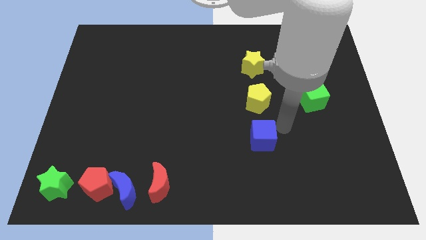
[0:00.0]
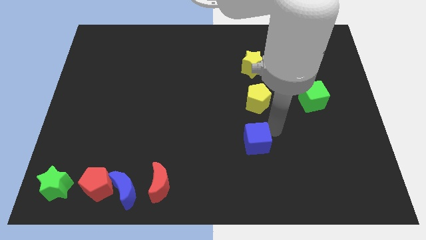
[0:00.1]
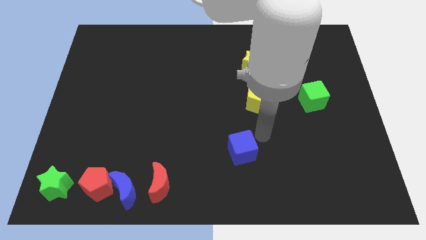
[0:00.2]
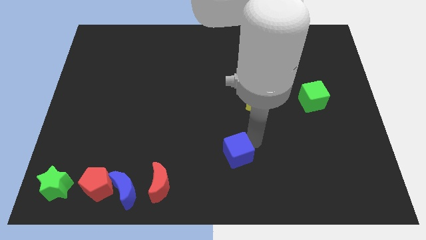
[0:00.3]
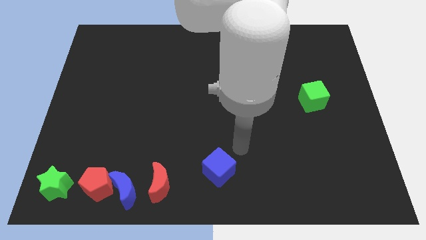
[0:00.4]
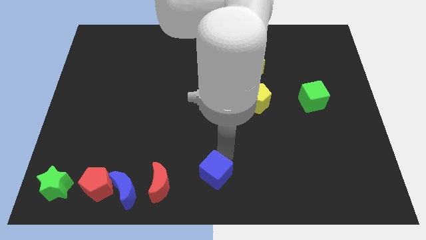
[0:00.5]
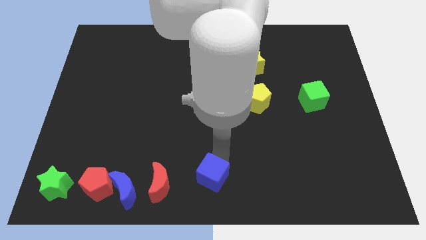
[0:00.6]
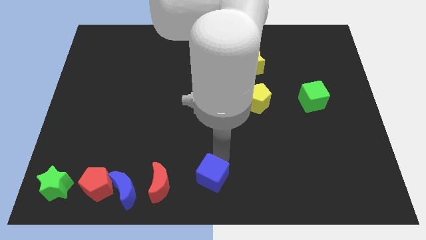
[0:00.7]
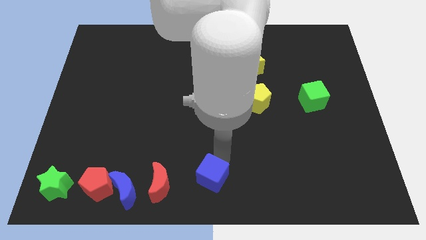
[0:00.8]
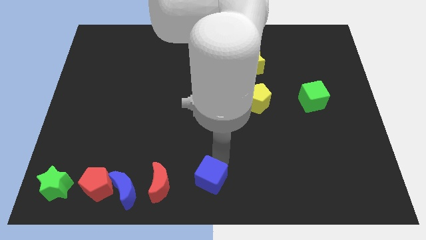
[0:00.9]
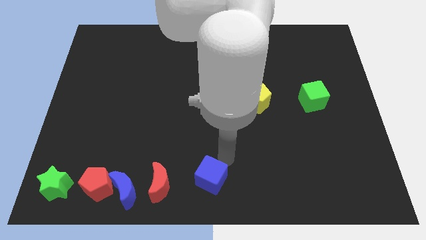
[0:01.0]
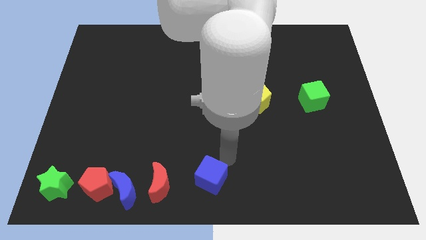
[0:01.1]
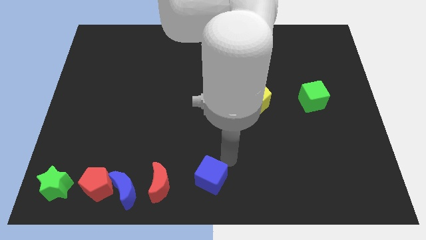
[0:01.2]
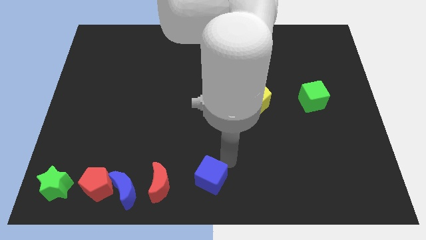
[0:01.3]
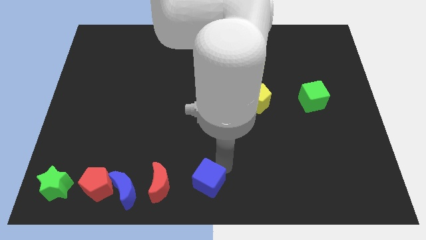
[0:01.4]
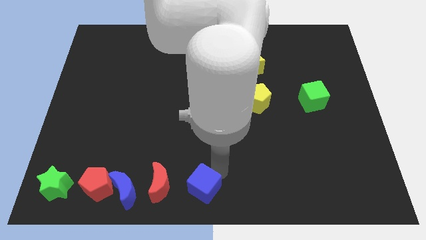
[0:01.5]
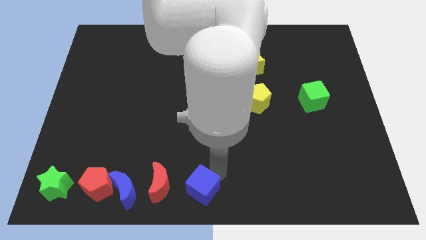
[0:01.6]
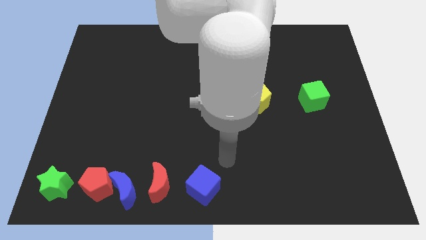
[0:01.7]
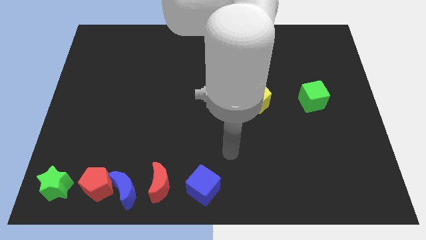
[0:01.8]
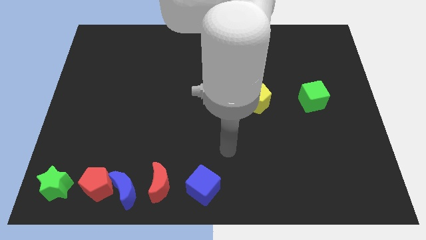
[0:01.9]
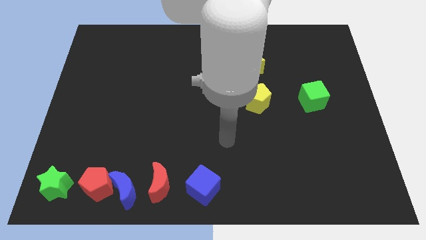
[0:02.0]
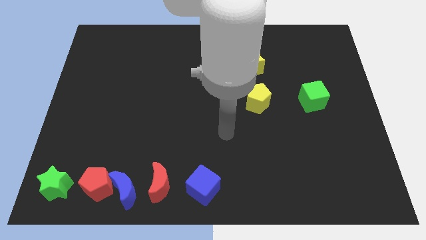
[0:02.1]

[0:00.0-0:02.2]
move the blue cube to the bottom center of the board

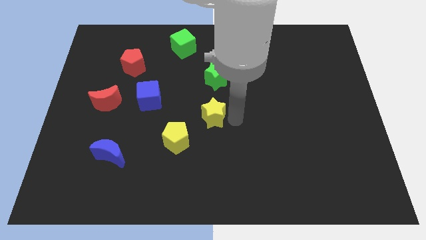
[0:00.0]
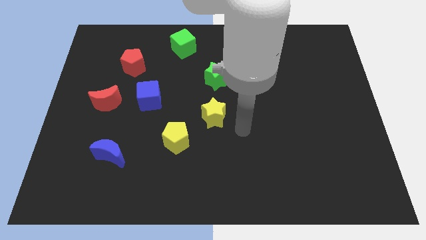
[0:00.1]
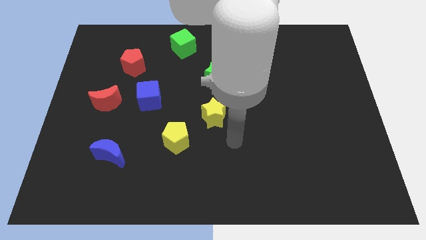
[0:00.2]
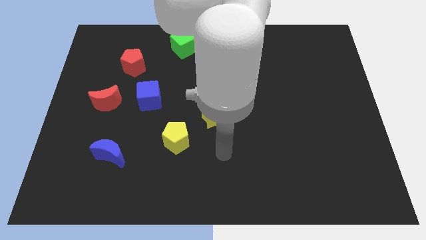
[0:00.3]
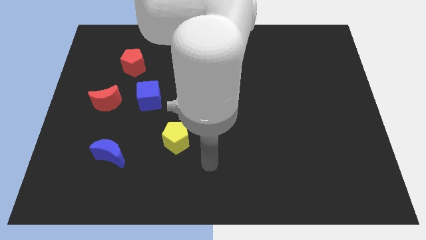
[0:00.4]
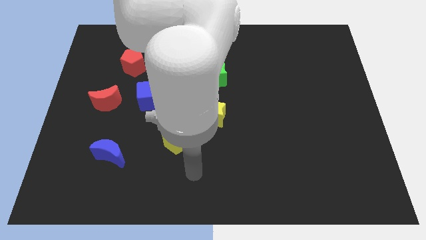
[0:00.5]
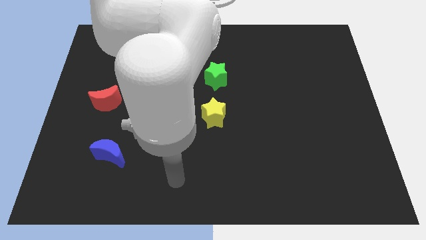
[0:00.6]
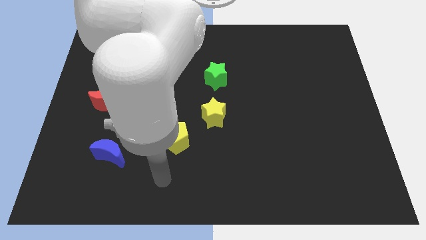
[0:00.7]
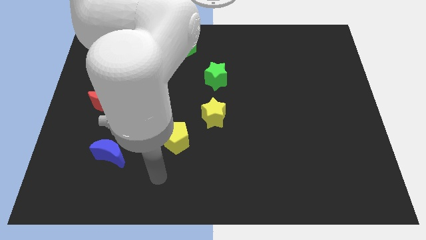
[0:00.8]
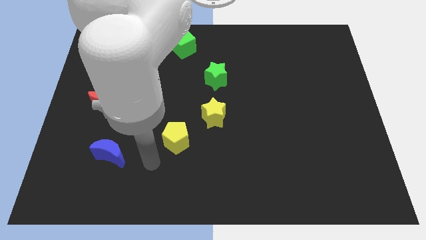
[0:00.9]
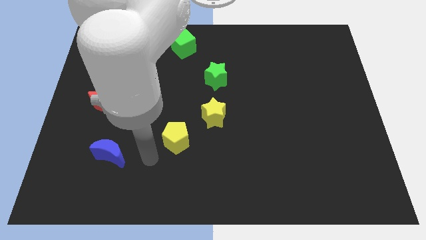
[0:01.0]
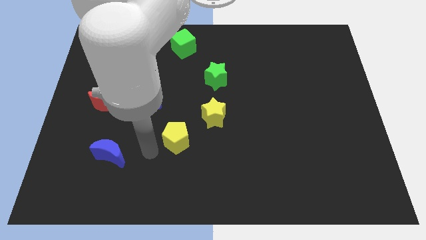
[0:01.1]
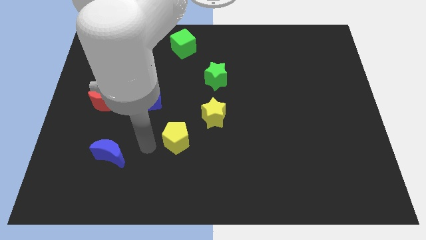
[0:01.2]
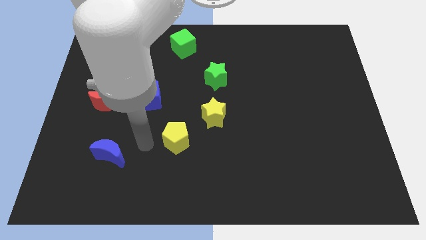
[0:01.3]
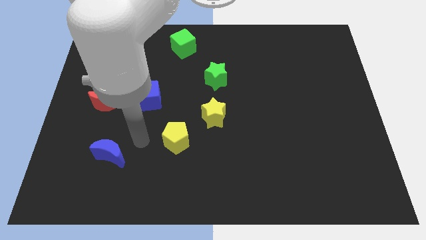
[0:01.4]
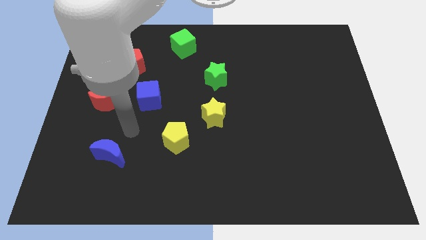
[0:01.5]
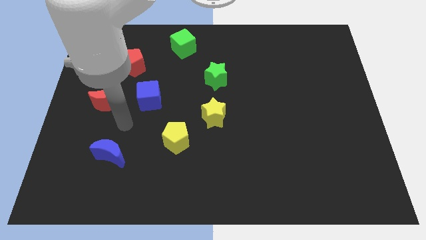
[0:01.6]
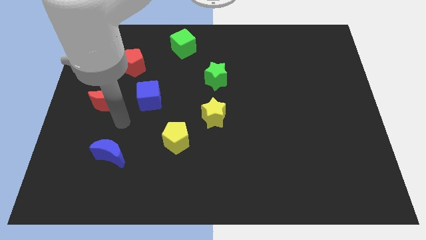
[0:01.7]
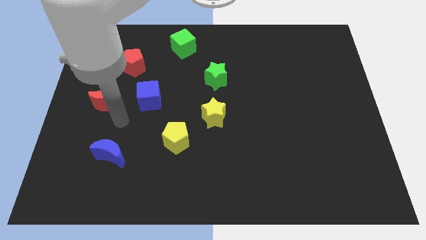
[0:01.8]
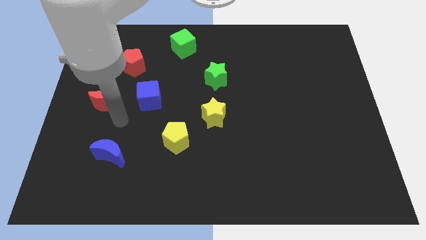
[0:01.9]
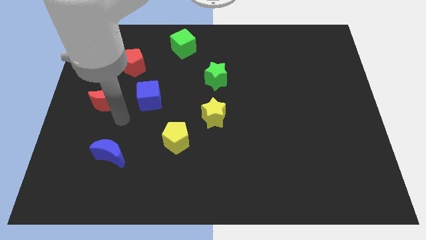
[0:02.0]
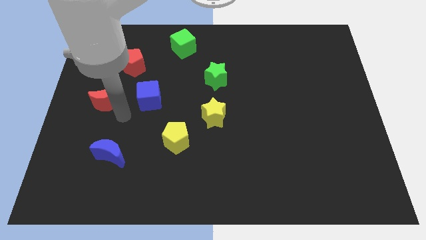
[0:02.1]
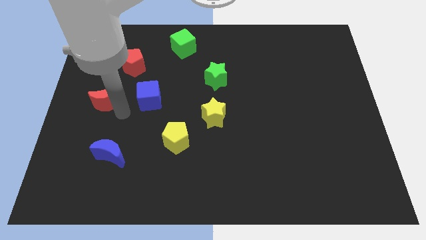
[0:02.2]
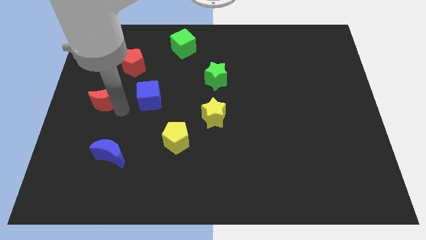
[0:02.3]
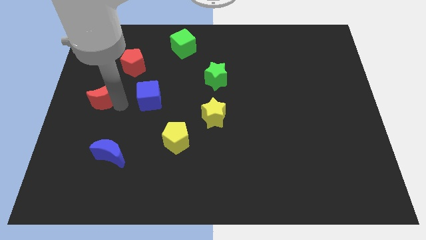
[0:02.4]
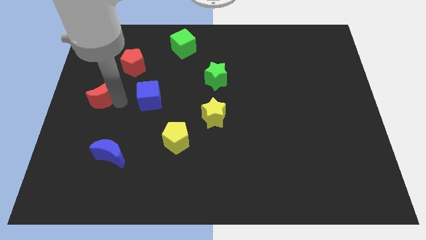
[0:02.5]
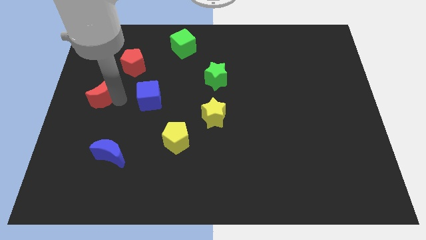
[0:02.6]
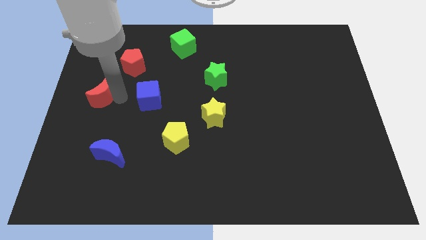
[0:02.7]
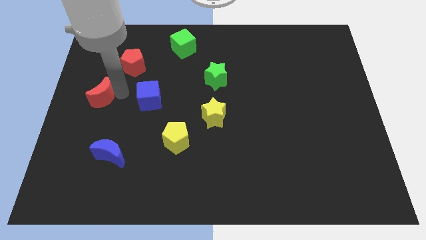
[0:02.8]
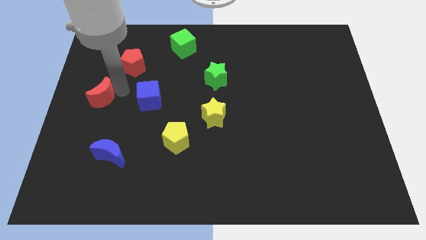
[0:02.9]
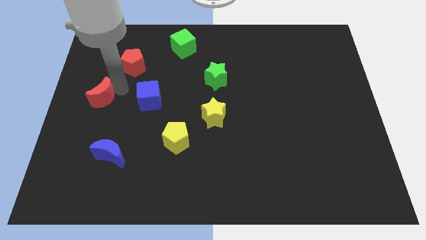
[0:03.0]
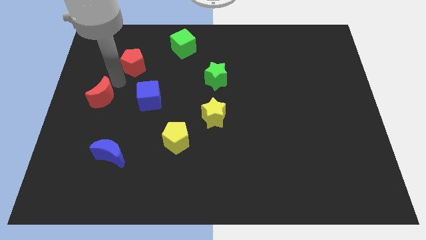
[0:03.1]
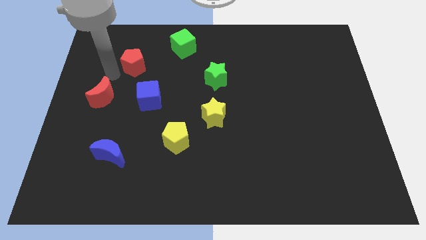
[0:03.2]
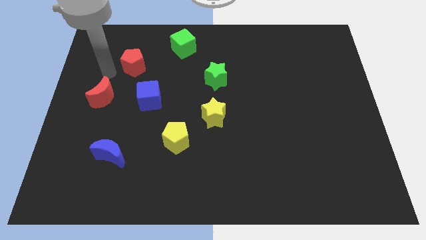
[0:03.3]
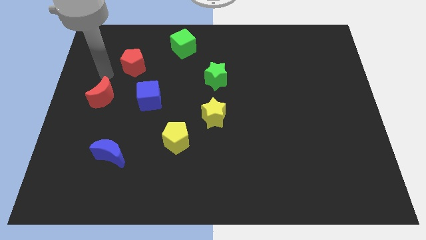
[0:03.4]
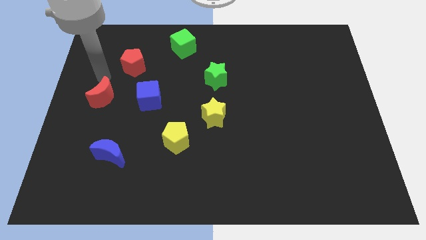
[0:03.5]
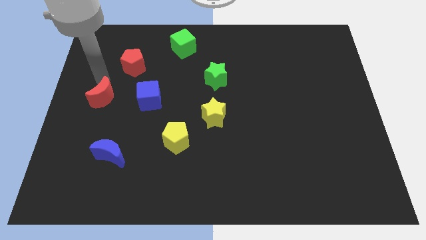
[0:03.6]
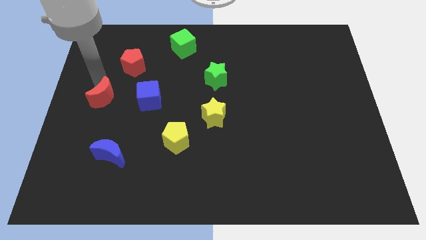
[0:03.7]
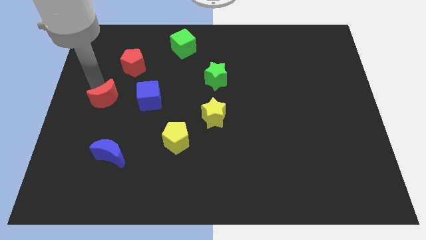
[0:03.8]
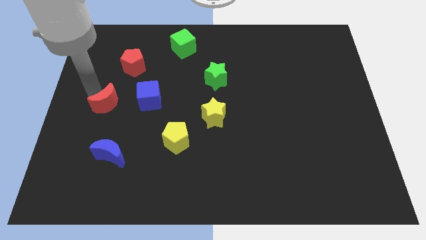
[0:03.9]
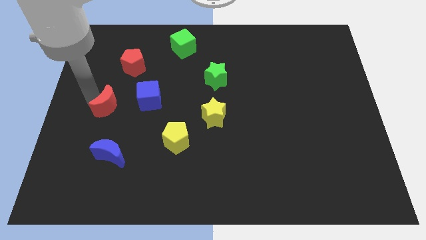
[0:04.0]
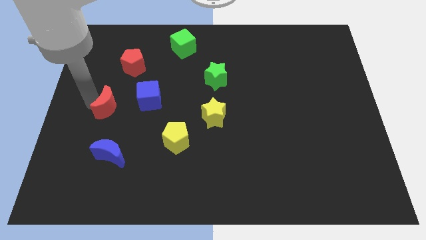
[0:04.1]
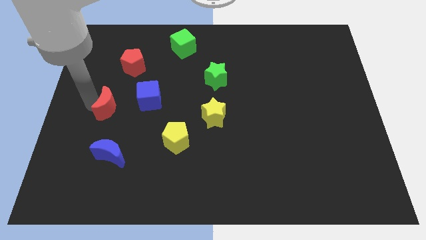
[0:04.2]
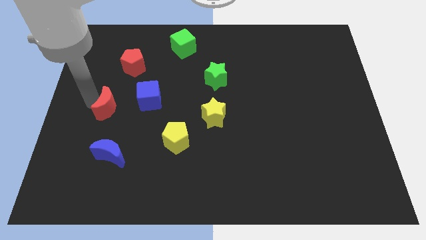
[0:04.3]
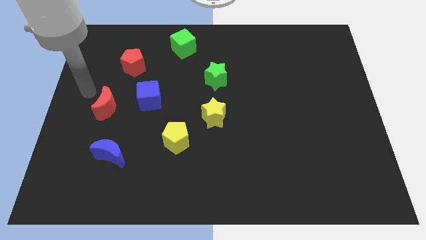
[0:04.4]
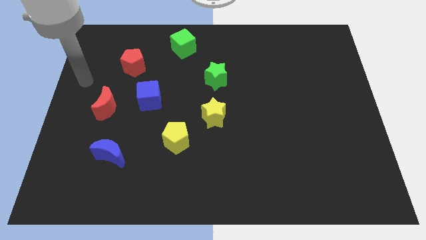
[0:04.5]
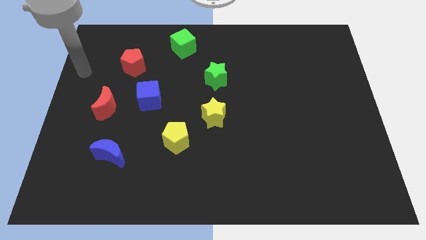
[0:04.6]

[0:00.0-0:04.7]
push the red moon slightly down

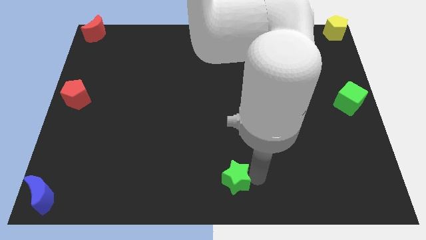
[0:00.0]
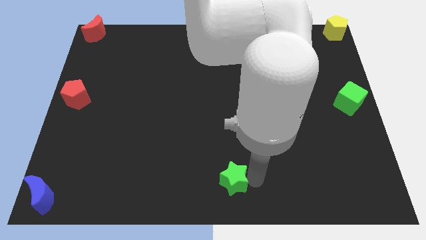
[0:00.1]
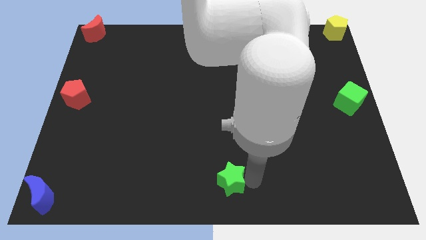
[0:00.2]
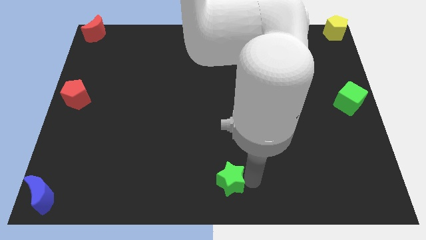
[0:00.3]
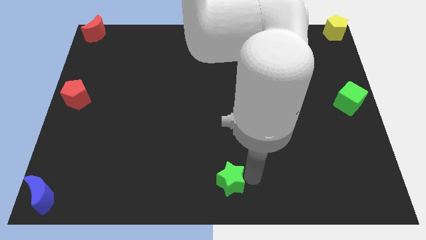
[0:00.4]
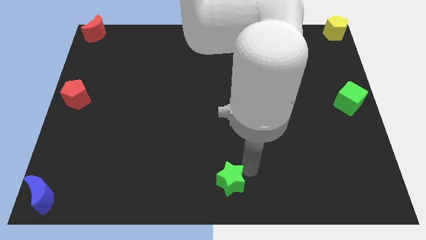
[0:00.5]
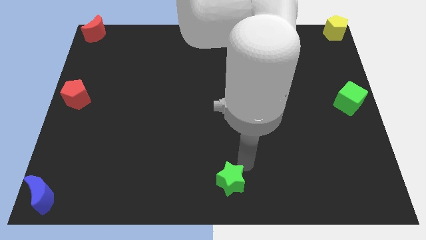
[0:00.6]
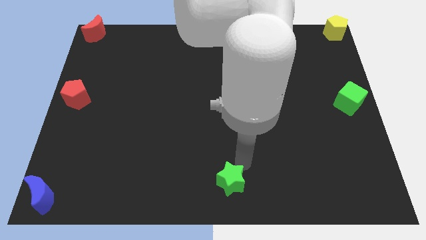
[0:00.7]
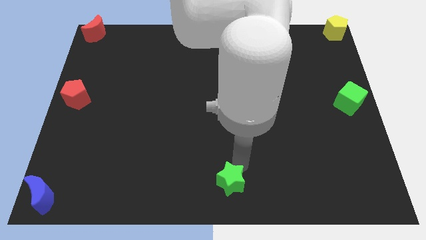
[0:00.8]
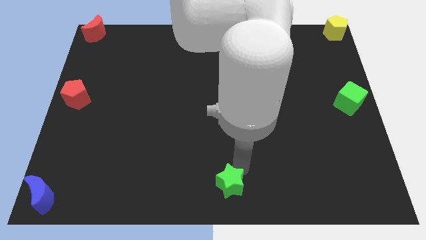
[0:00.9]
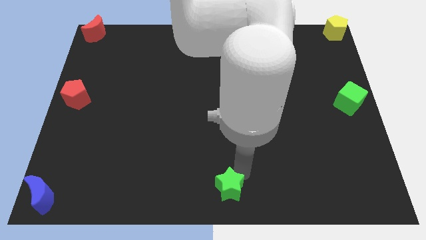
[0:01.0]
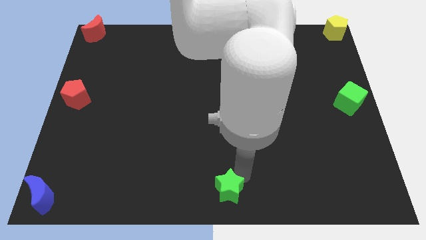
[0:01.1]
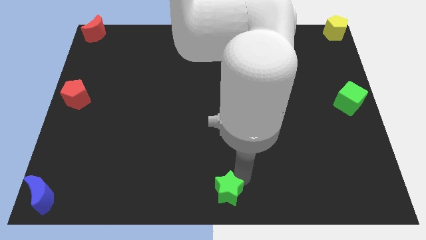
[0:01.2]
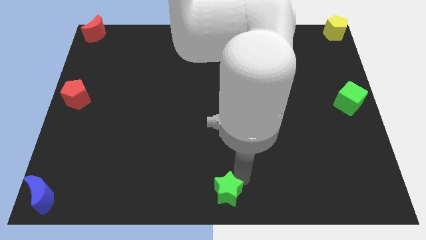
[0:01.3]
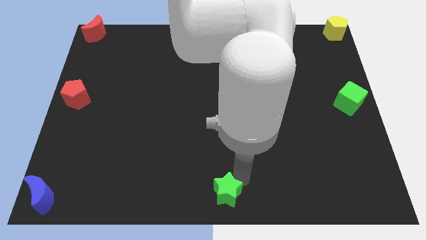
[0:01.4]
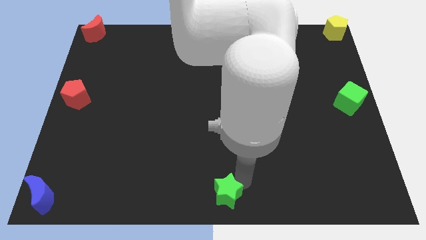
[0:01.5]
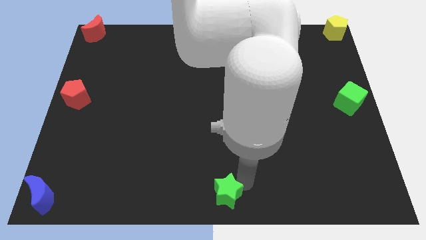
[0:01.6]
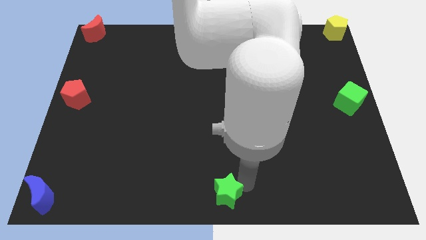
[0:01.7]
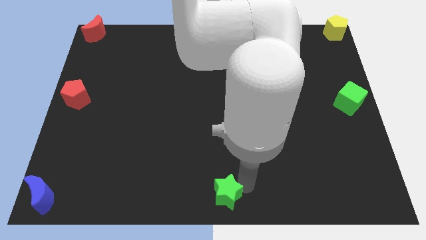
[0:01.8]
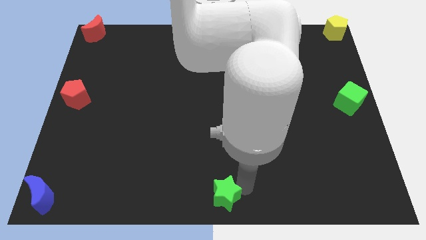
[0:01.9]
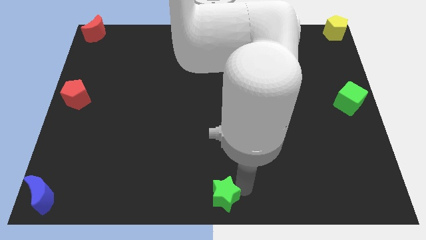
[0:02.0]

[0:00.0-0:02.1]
push the green star to the bottom center of the board

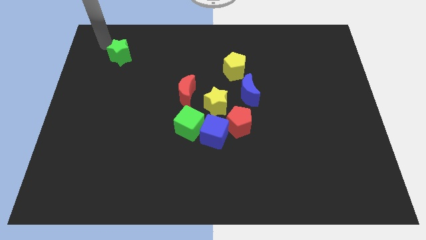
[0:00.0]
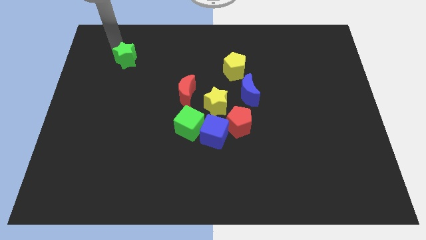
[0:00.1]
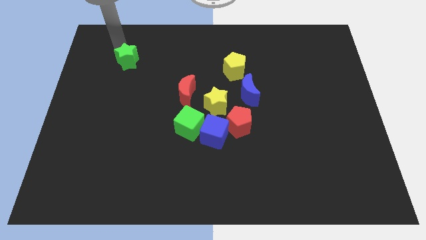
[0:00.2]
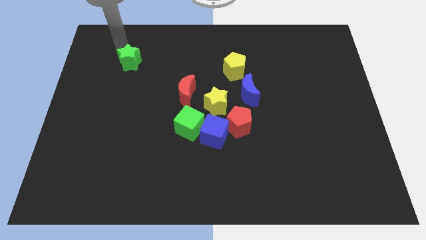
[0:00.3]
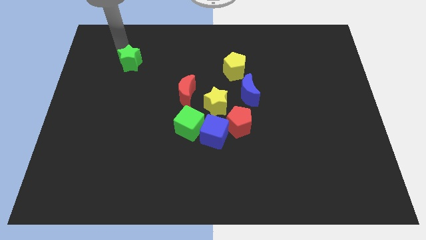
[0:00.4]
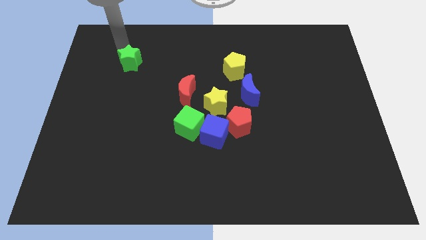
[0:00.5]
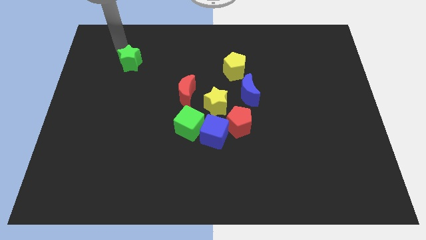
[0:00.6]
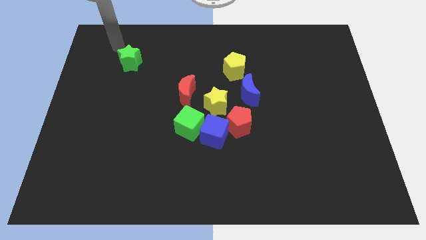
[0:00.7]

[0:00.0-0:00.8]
slightly move the green star to the down
